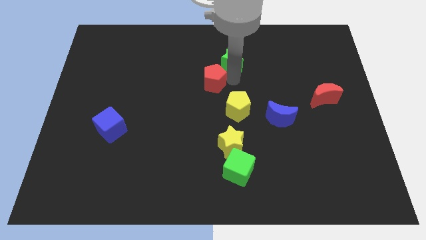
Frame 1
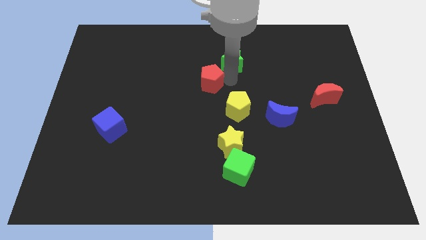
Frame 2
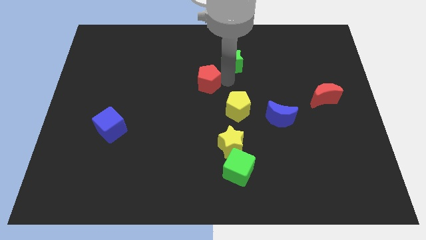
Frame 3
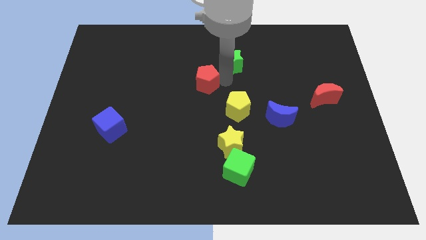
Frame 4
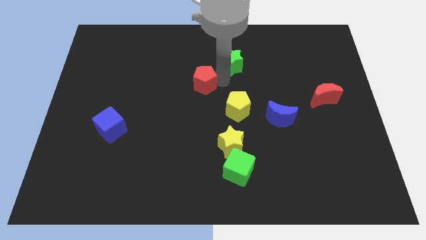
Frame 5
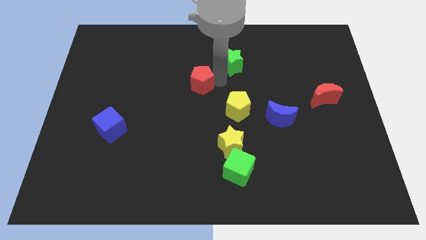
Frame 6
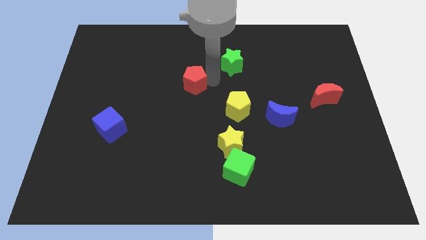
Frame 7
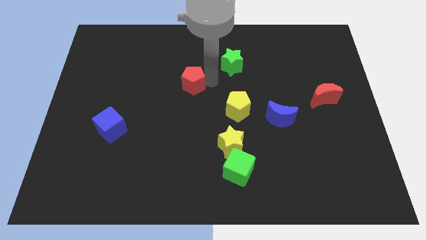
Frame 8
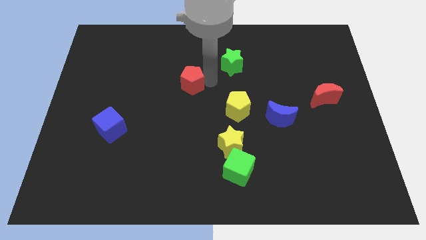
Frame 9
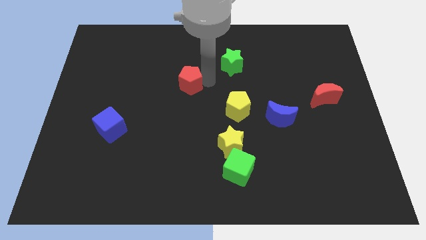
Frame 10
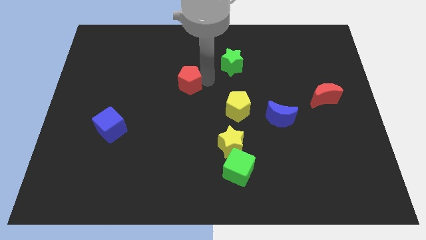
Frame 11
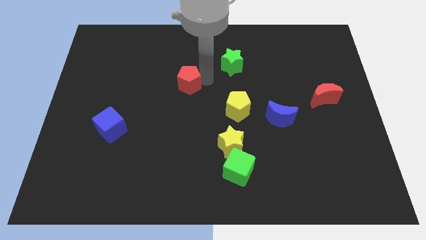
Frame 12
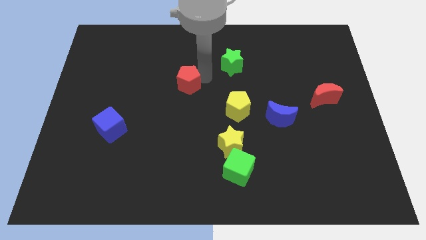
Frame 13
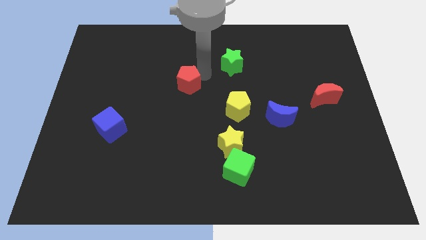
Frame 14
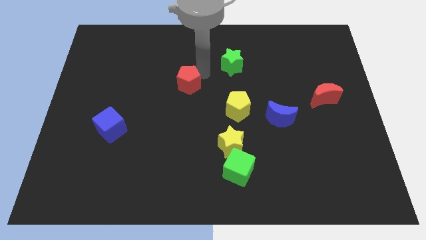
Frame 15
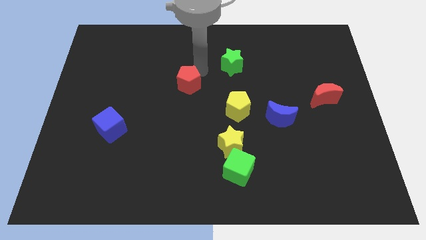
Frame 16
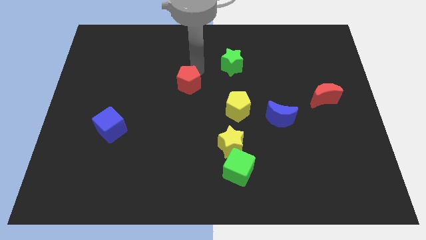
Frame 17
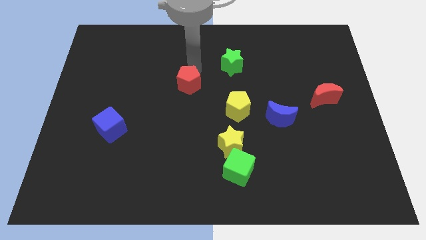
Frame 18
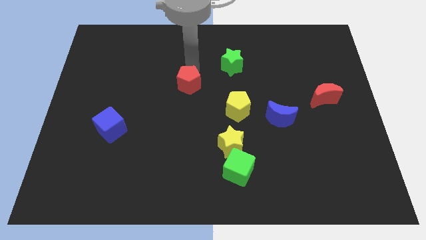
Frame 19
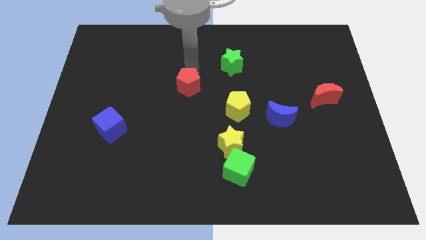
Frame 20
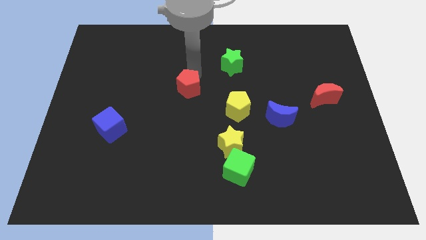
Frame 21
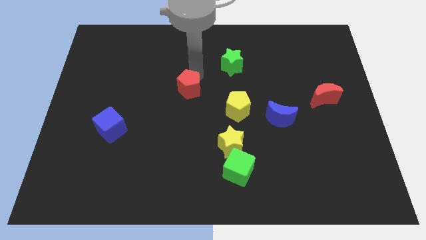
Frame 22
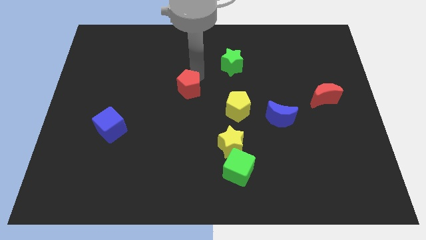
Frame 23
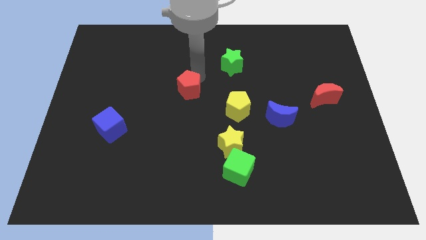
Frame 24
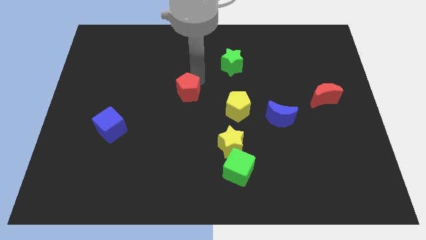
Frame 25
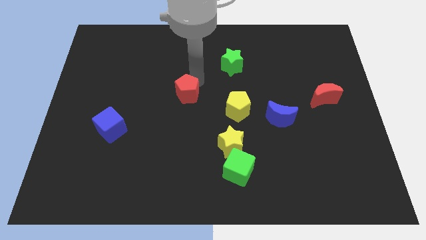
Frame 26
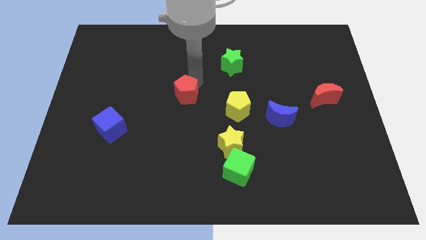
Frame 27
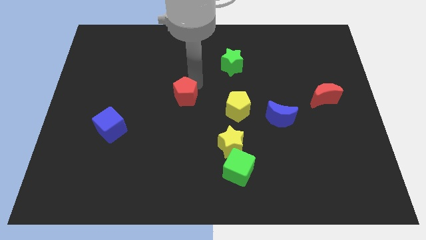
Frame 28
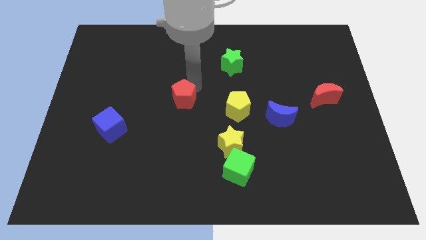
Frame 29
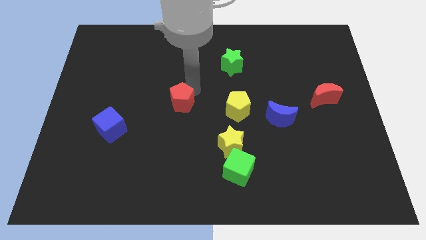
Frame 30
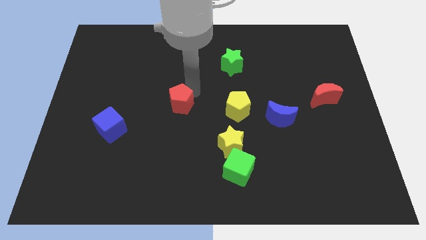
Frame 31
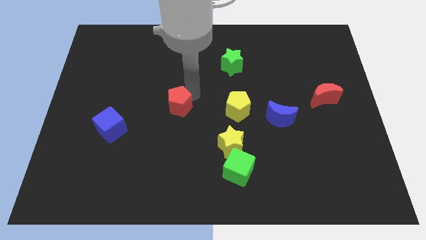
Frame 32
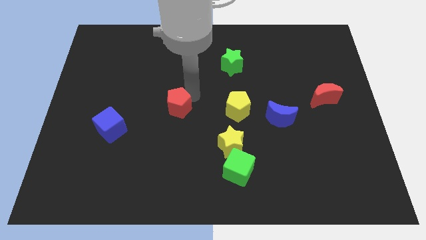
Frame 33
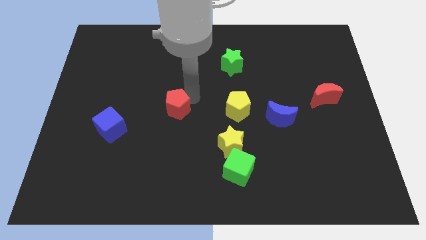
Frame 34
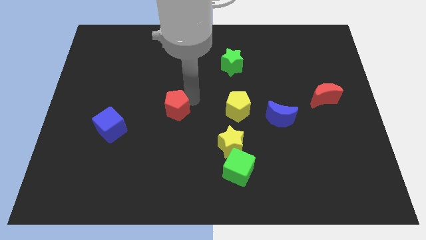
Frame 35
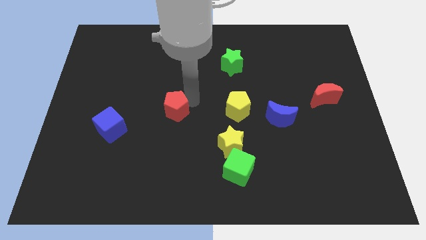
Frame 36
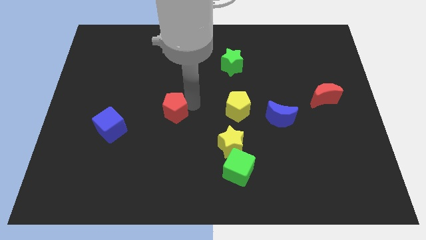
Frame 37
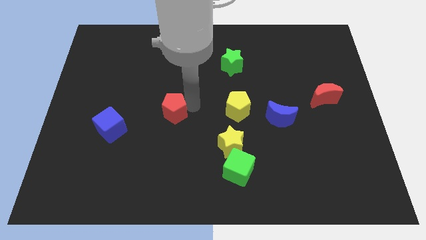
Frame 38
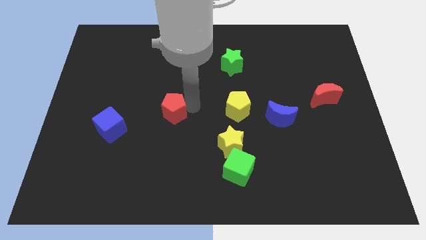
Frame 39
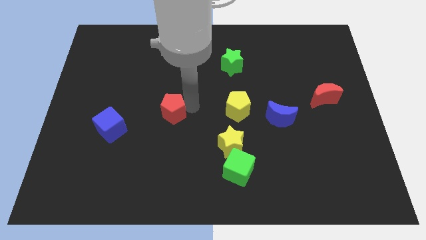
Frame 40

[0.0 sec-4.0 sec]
slide the red pentagon diagonally on the top left side of the yellow star

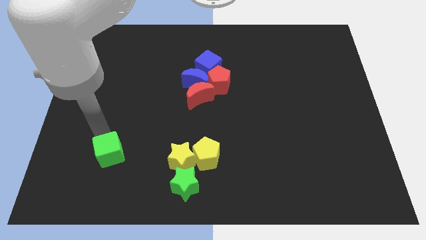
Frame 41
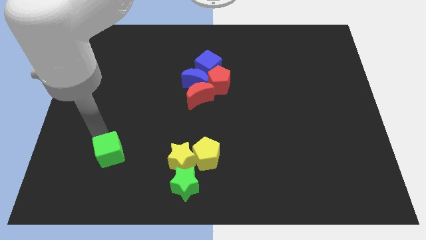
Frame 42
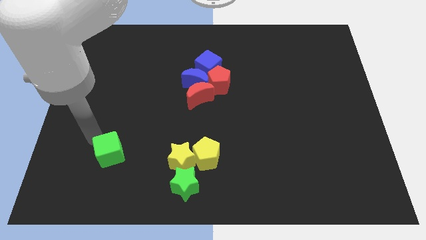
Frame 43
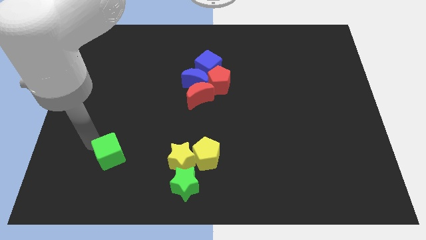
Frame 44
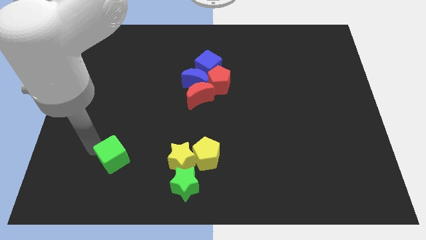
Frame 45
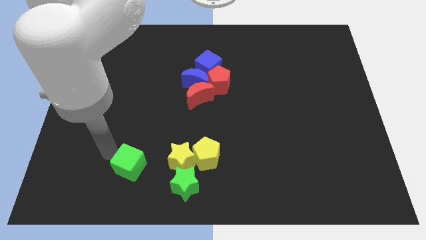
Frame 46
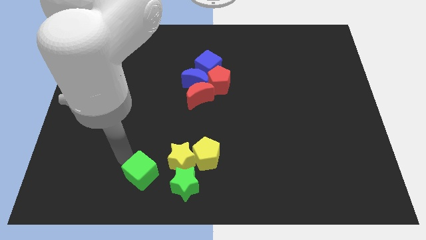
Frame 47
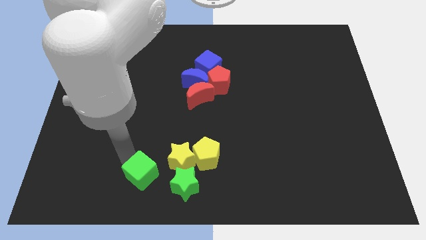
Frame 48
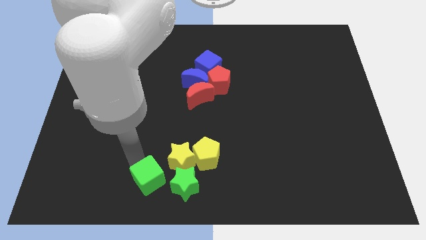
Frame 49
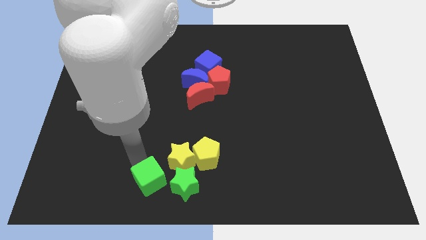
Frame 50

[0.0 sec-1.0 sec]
place the green cube diagonal to the yellow star

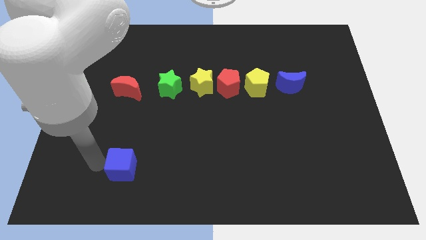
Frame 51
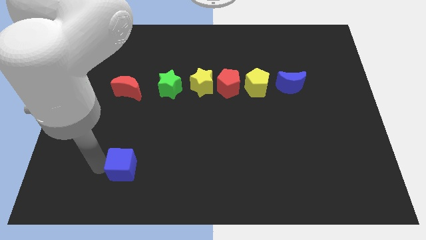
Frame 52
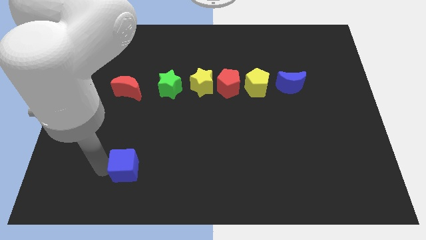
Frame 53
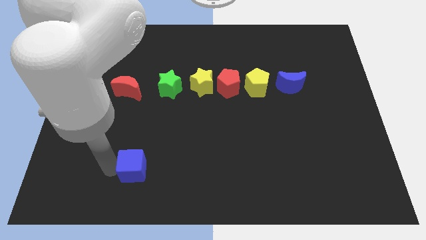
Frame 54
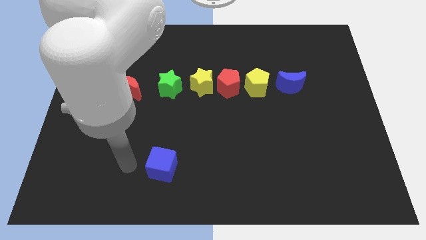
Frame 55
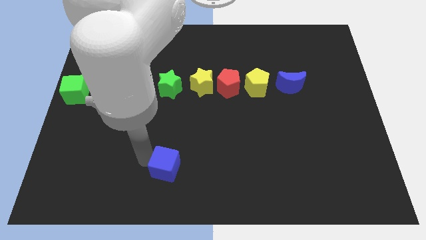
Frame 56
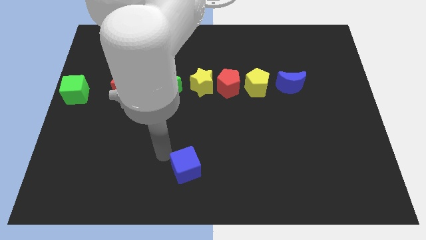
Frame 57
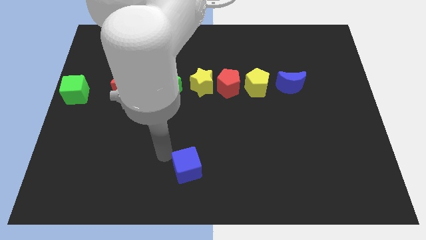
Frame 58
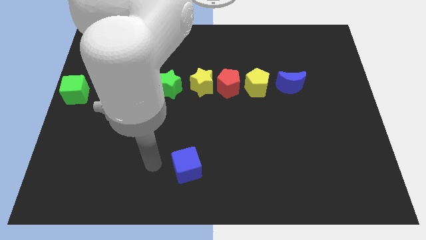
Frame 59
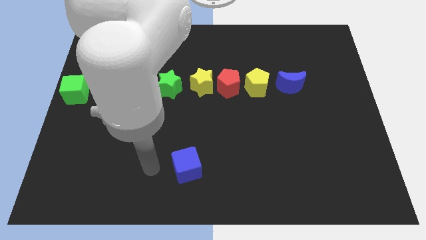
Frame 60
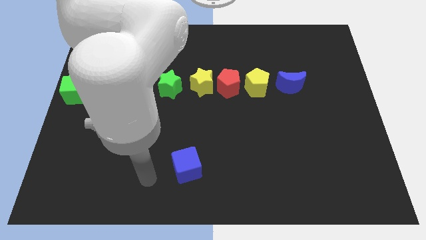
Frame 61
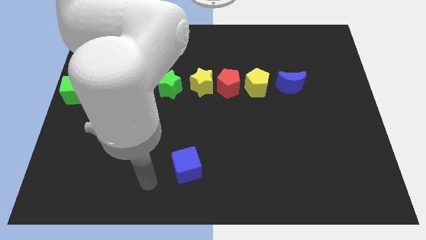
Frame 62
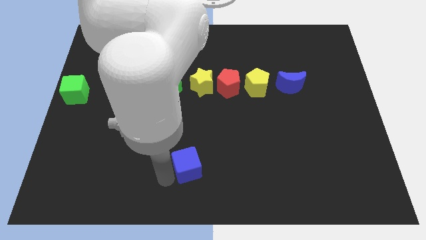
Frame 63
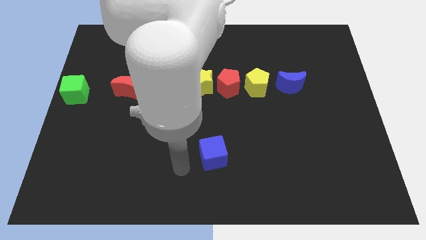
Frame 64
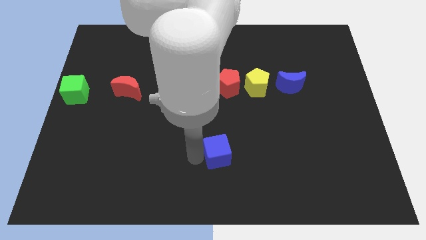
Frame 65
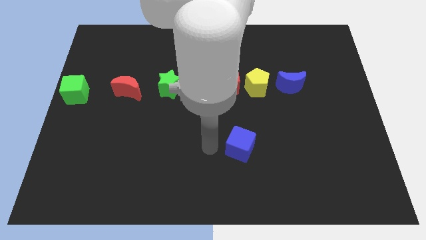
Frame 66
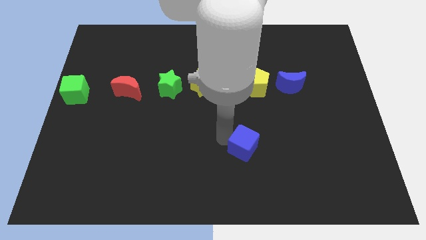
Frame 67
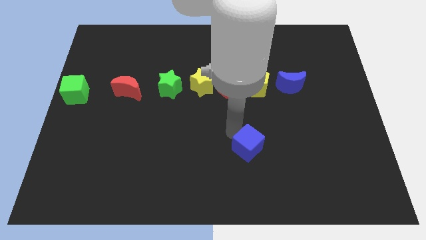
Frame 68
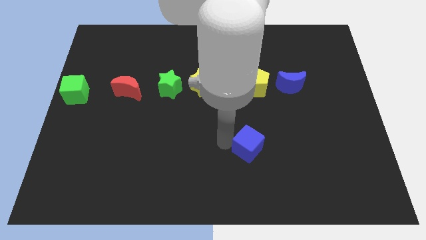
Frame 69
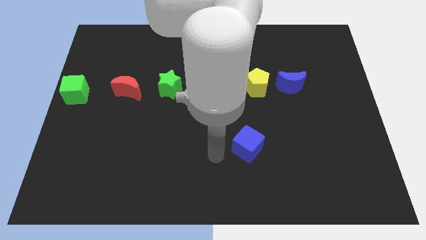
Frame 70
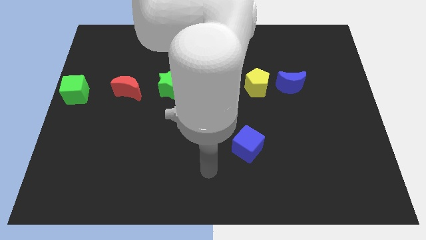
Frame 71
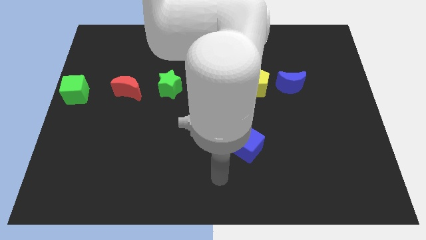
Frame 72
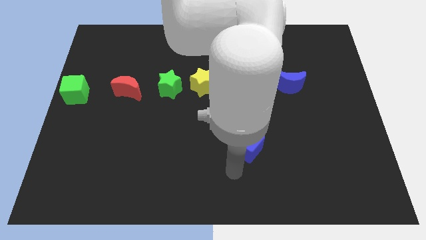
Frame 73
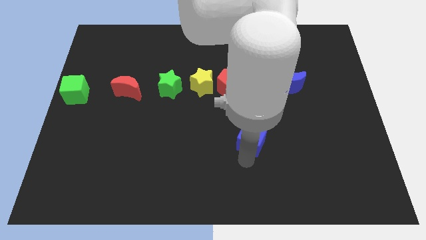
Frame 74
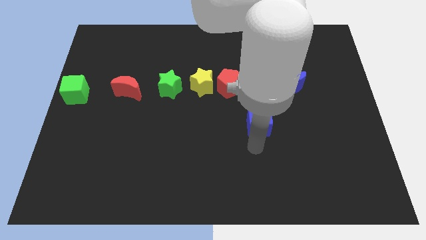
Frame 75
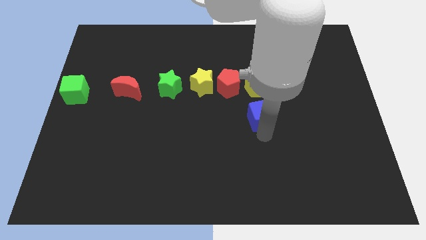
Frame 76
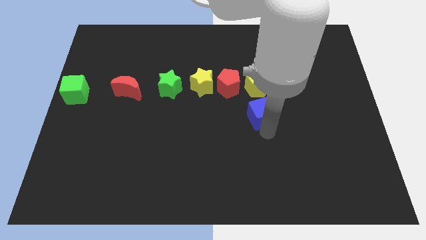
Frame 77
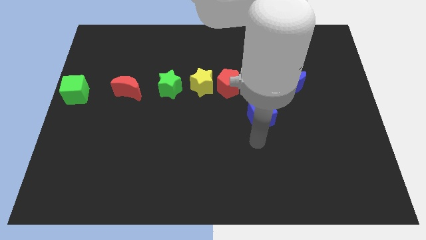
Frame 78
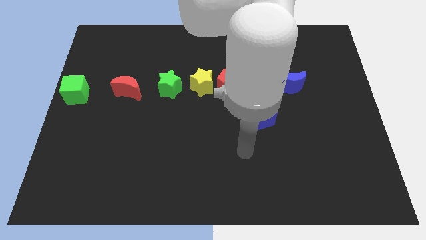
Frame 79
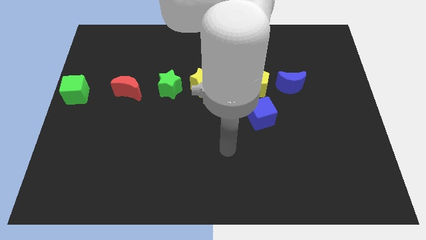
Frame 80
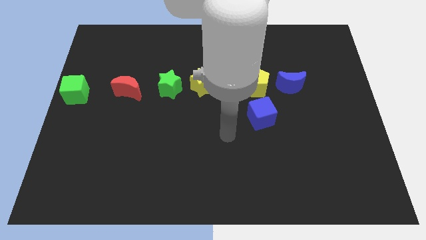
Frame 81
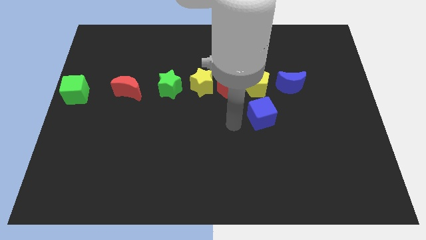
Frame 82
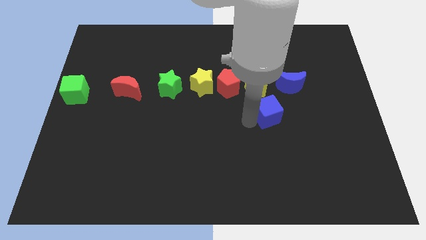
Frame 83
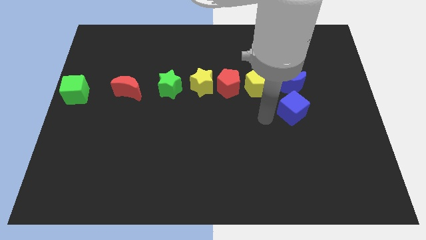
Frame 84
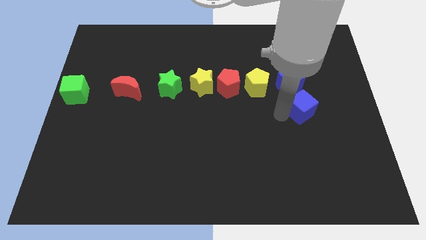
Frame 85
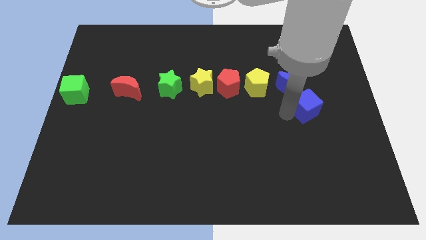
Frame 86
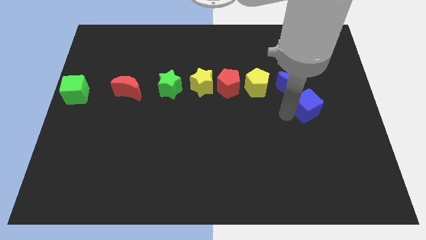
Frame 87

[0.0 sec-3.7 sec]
place the blue cube below the blue crescent

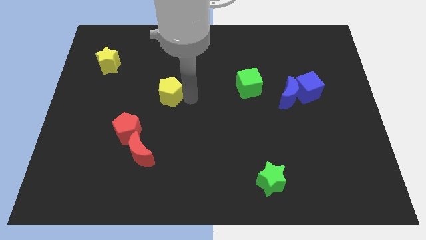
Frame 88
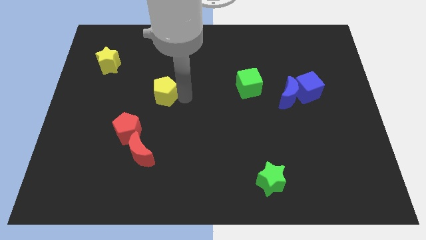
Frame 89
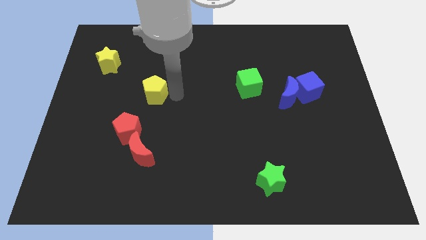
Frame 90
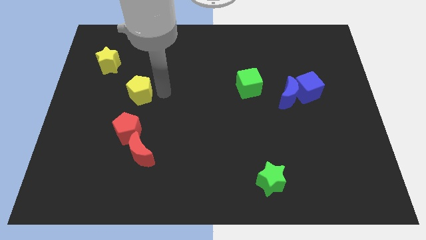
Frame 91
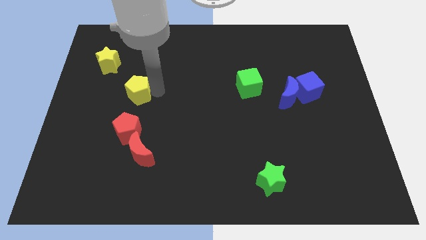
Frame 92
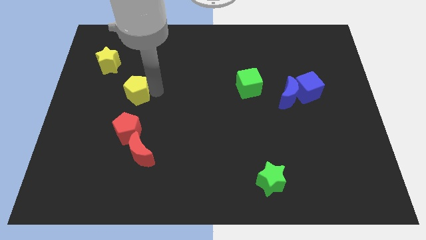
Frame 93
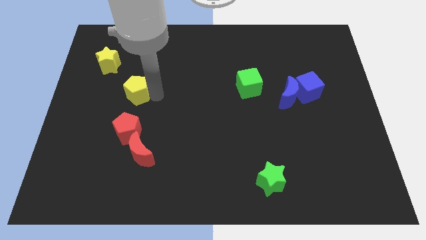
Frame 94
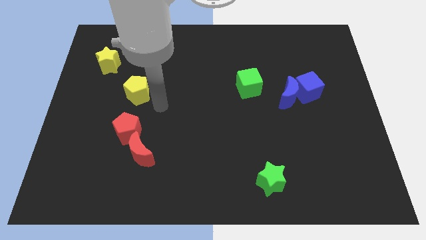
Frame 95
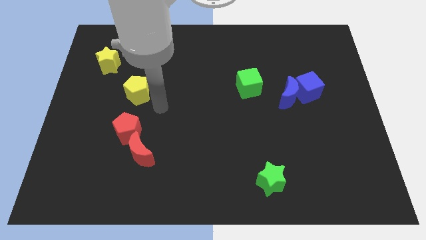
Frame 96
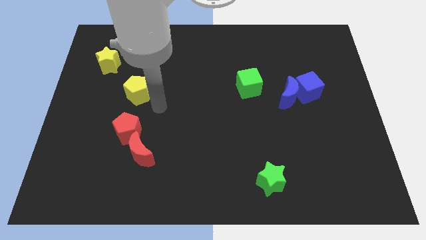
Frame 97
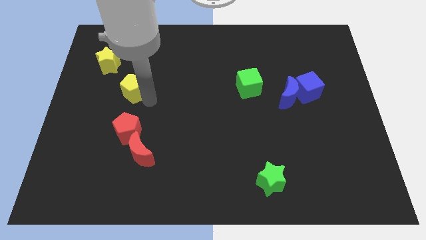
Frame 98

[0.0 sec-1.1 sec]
move the yellow pentagon to the left
